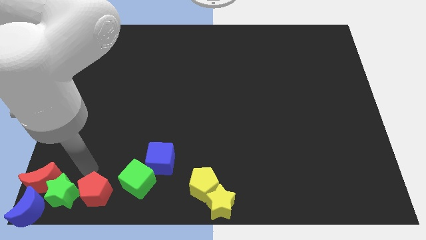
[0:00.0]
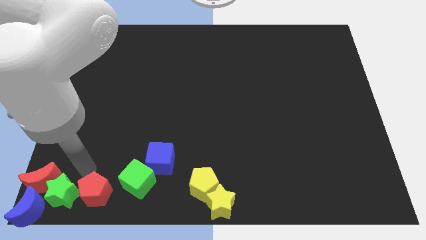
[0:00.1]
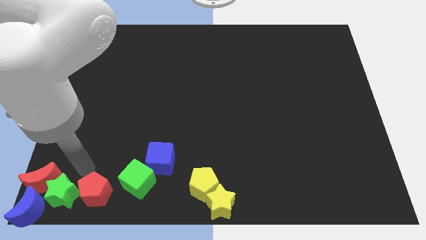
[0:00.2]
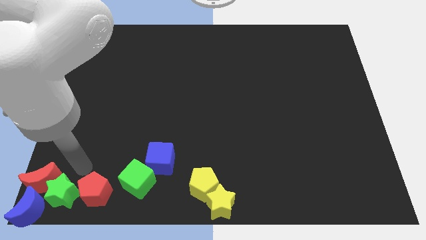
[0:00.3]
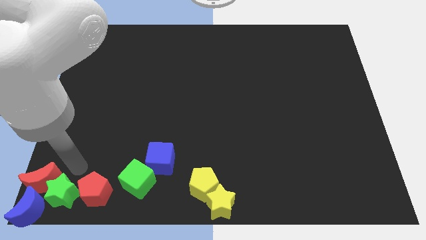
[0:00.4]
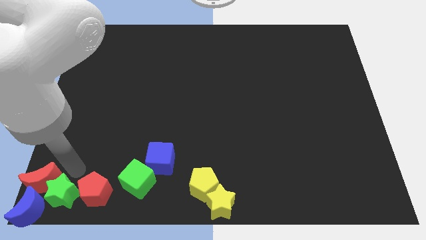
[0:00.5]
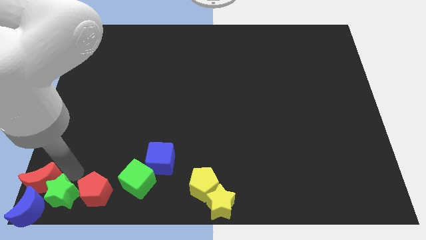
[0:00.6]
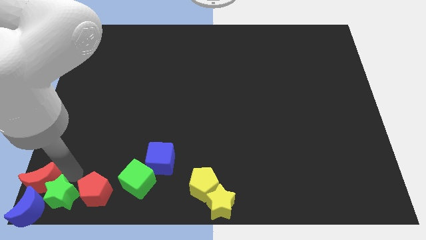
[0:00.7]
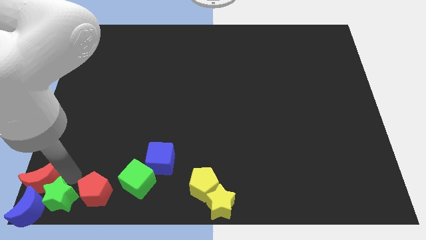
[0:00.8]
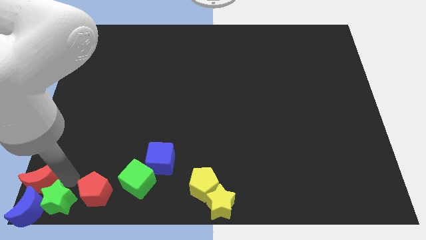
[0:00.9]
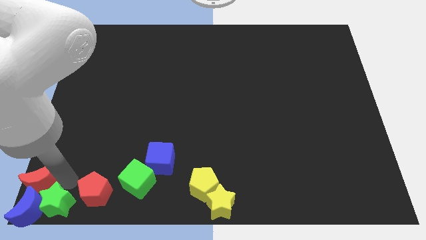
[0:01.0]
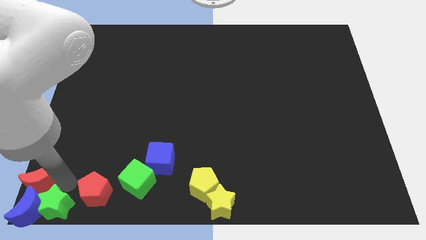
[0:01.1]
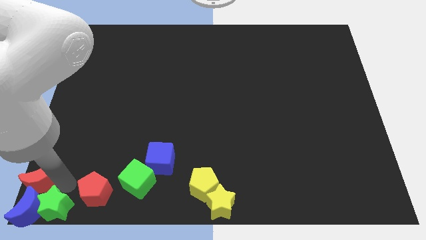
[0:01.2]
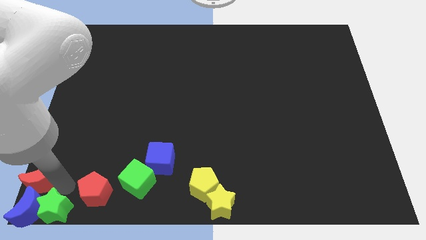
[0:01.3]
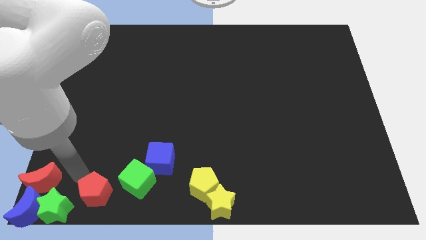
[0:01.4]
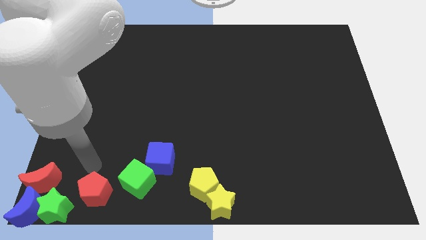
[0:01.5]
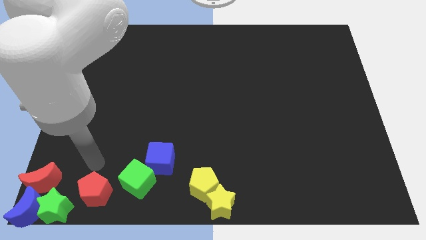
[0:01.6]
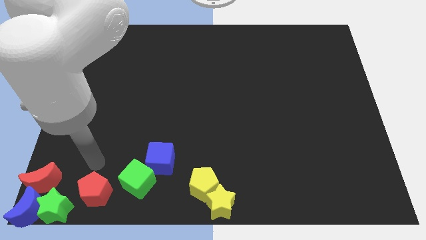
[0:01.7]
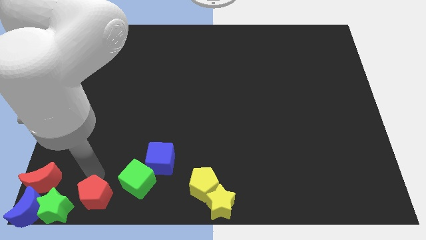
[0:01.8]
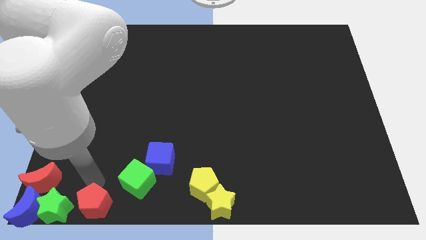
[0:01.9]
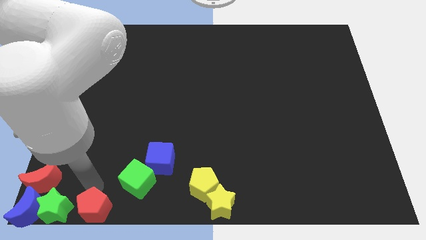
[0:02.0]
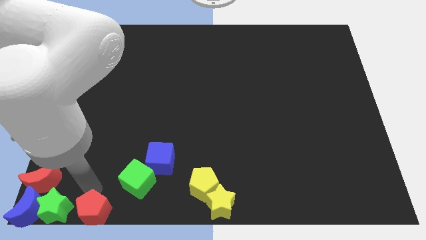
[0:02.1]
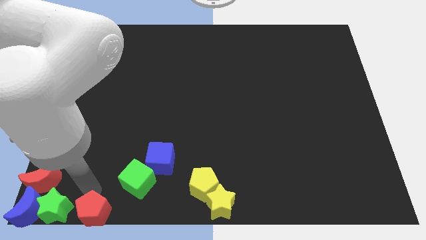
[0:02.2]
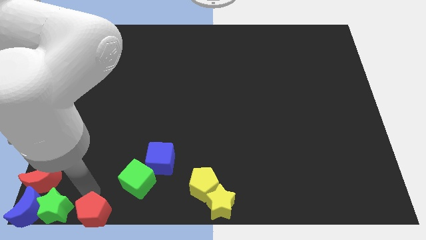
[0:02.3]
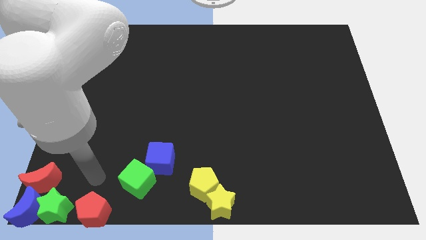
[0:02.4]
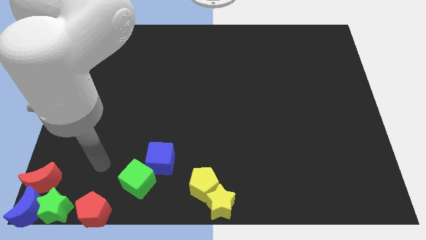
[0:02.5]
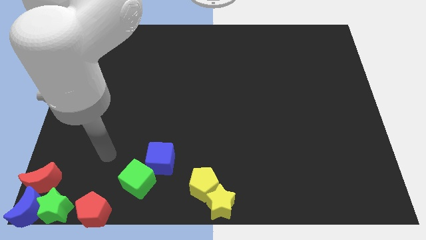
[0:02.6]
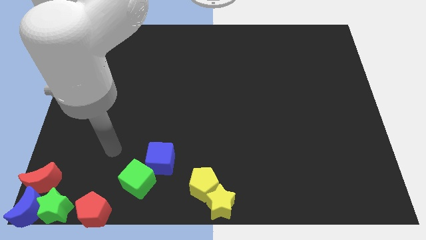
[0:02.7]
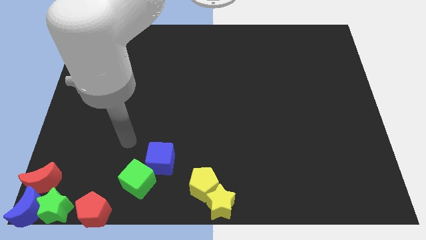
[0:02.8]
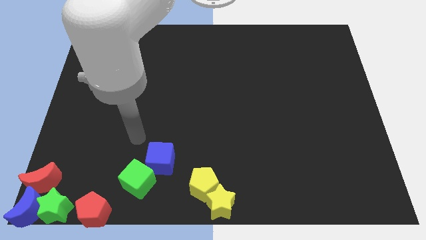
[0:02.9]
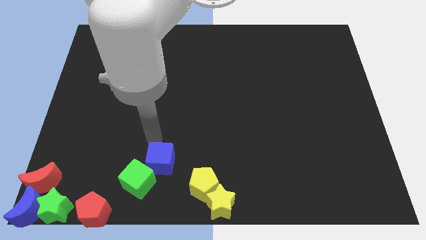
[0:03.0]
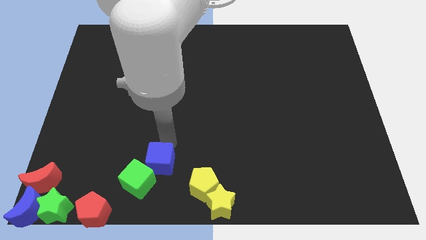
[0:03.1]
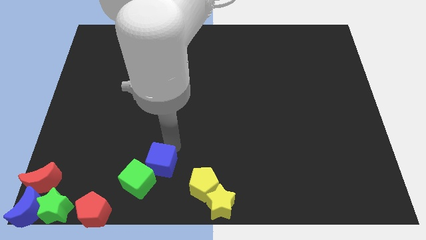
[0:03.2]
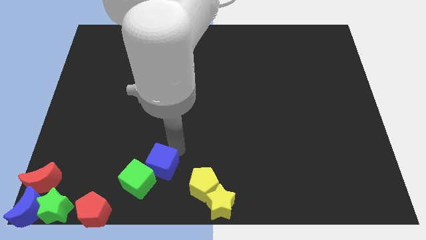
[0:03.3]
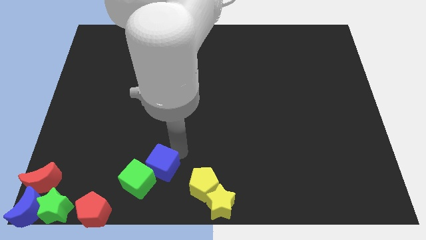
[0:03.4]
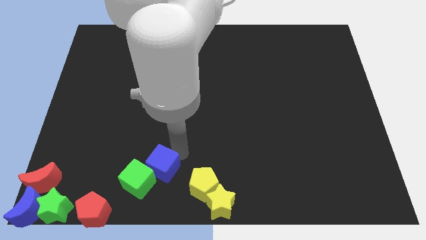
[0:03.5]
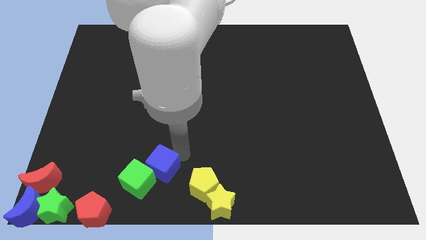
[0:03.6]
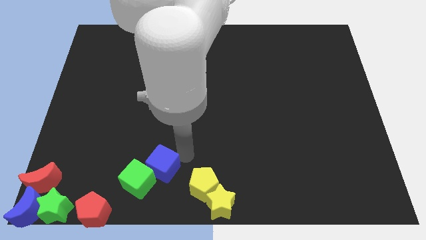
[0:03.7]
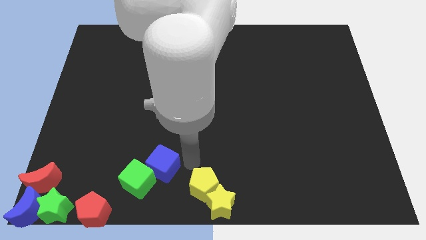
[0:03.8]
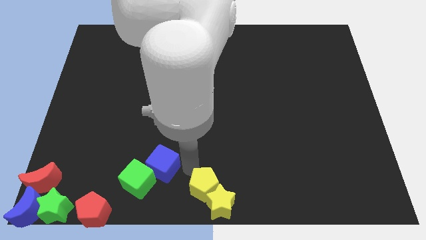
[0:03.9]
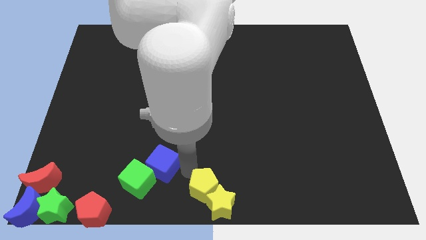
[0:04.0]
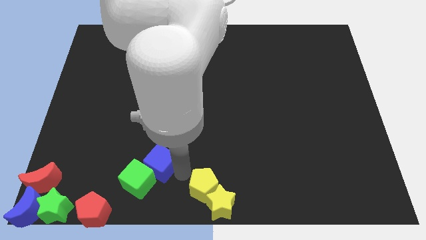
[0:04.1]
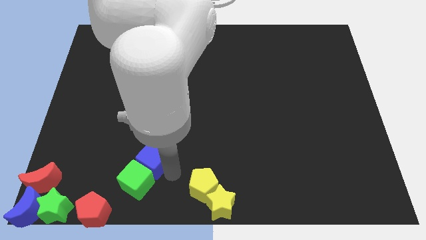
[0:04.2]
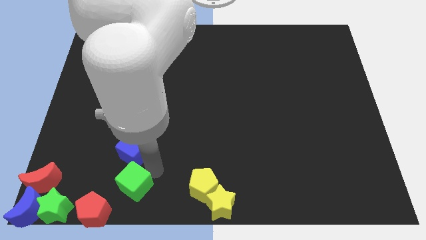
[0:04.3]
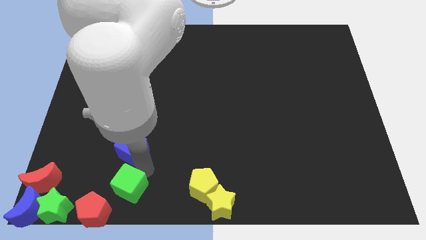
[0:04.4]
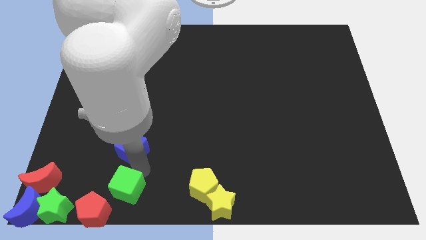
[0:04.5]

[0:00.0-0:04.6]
slightly move the green star and red pentagon to the bottom left of the board

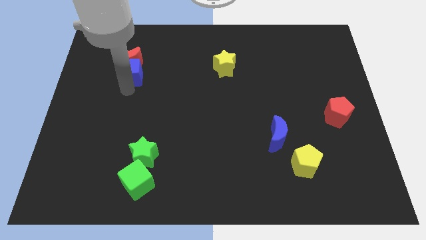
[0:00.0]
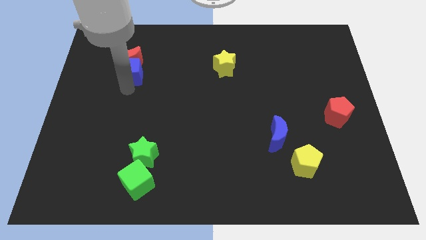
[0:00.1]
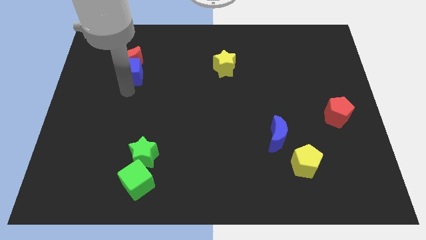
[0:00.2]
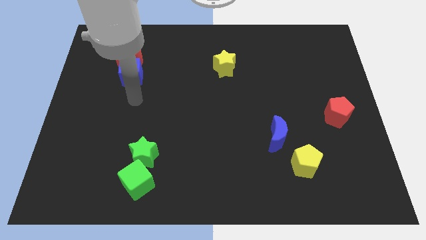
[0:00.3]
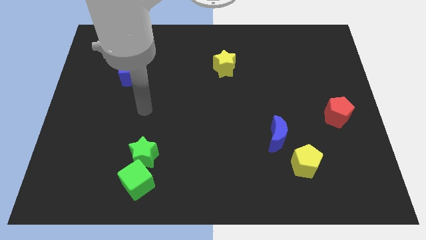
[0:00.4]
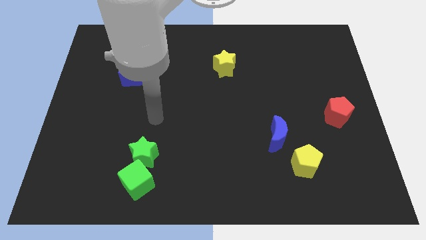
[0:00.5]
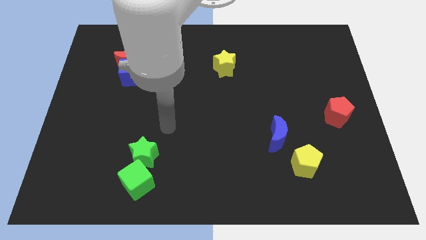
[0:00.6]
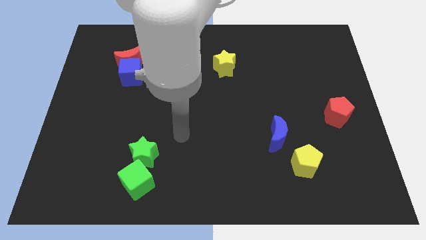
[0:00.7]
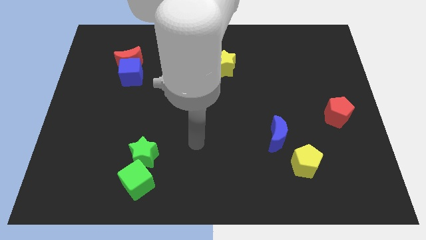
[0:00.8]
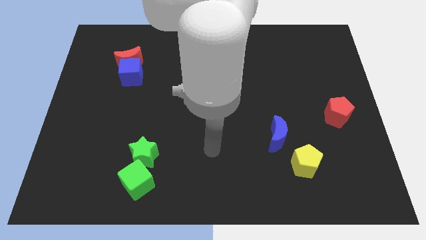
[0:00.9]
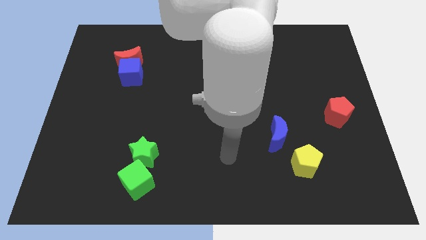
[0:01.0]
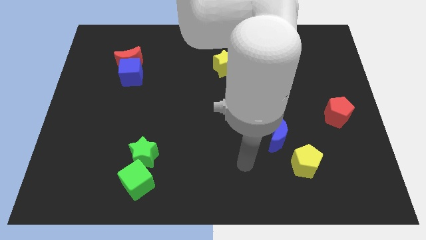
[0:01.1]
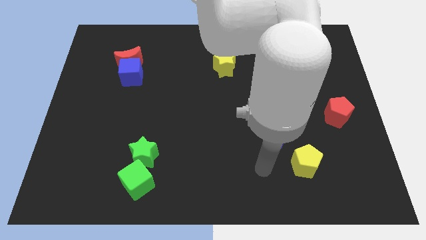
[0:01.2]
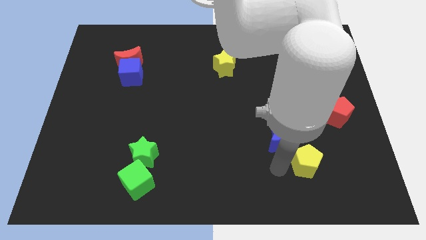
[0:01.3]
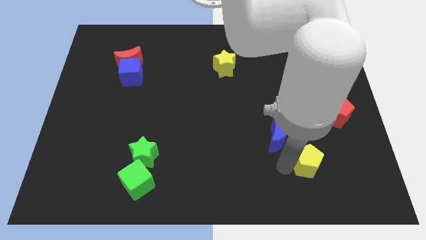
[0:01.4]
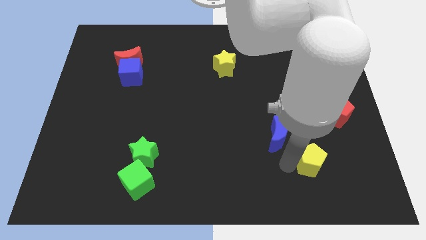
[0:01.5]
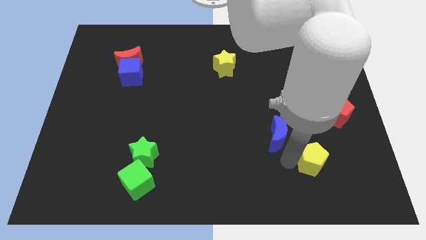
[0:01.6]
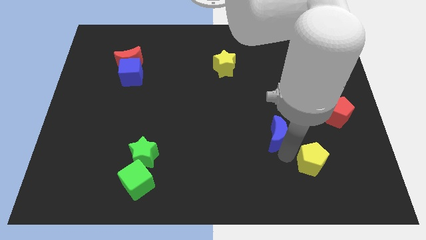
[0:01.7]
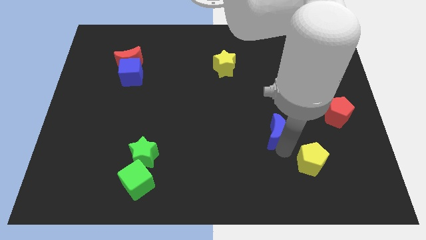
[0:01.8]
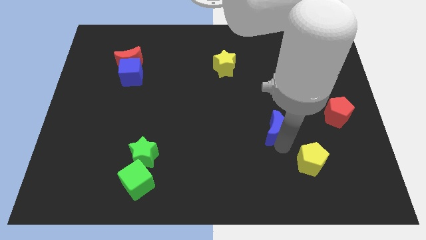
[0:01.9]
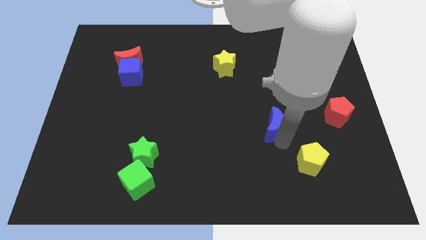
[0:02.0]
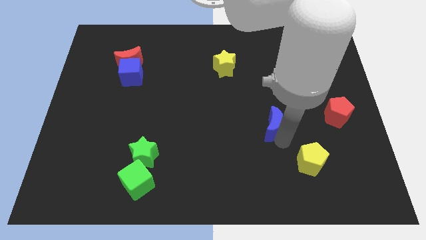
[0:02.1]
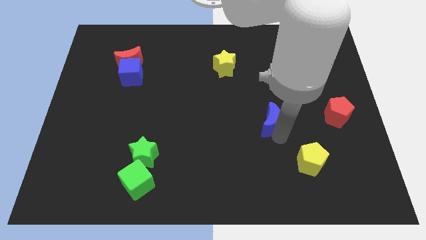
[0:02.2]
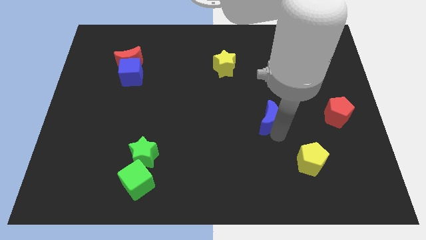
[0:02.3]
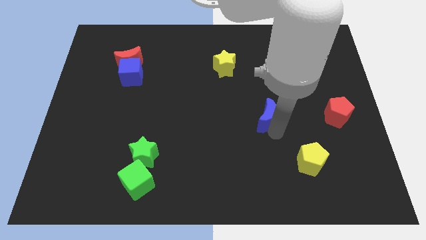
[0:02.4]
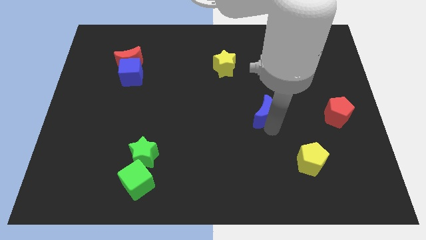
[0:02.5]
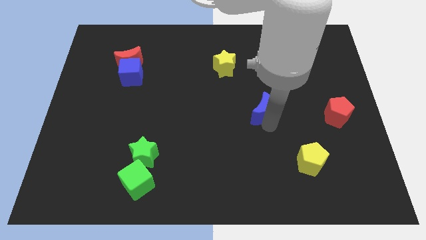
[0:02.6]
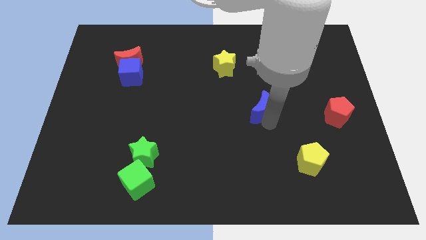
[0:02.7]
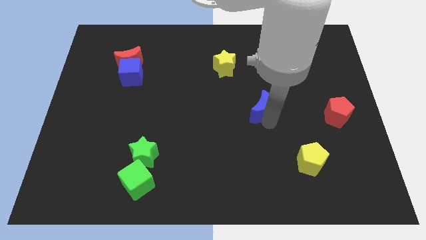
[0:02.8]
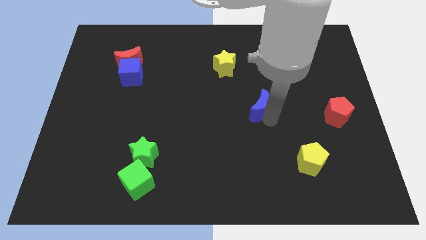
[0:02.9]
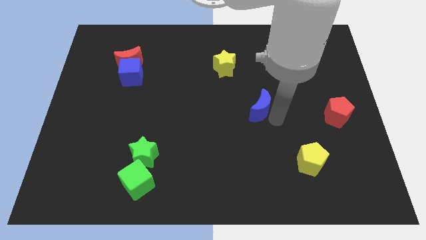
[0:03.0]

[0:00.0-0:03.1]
separate the blue moon from the yellow pentagon

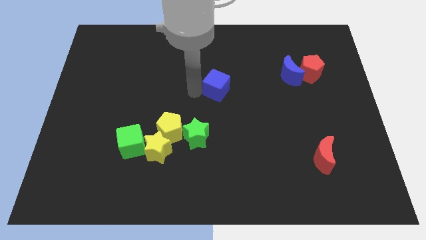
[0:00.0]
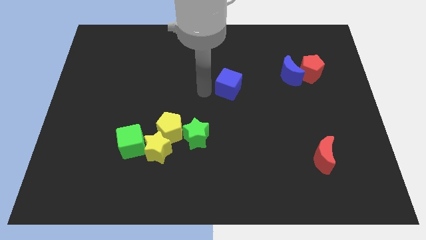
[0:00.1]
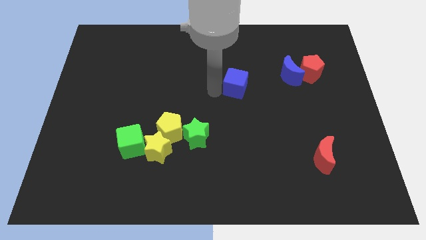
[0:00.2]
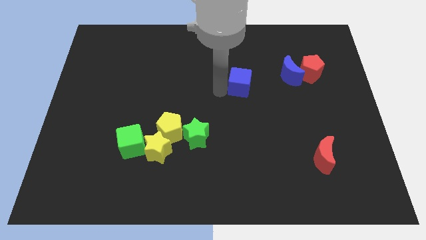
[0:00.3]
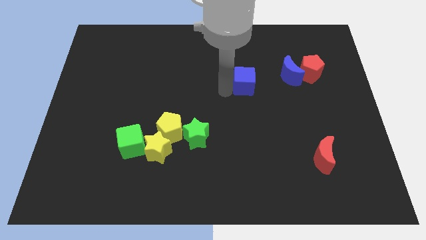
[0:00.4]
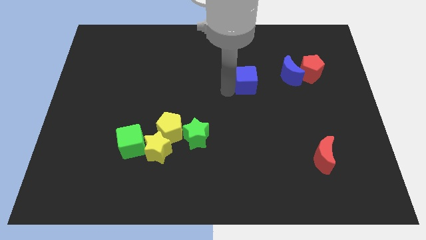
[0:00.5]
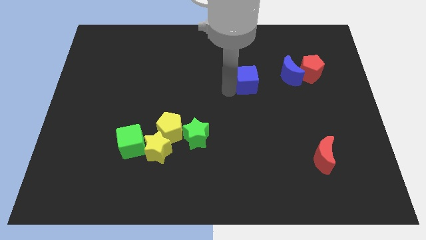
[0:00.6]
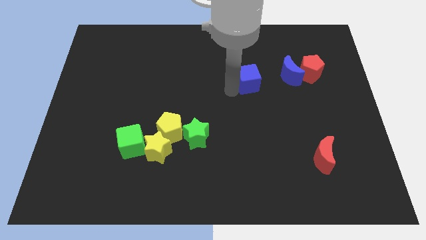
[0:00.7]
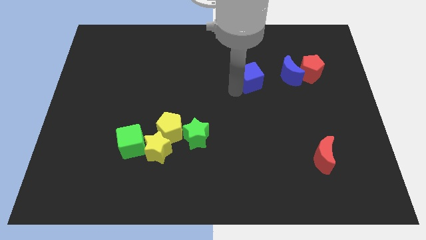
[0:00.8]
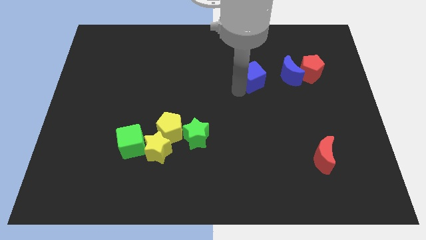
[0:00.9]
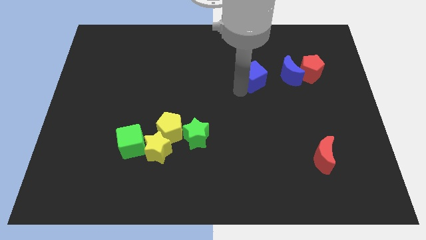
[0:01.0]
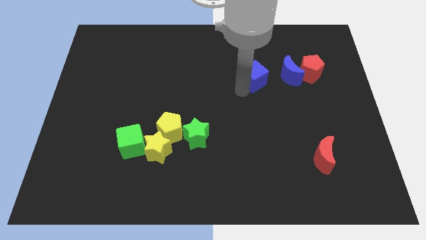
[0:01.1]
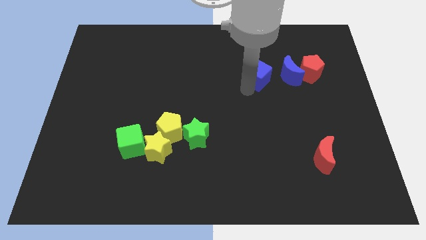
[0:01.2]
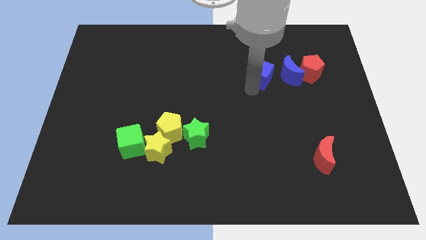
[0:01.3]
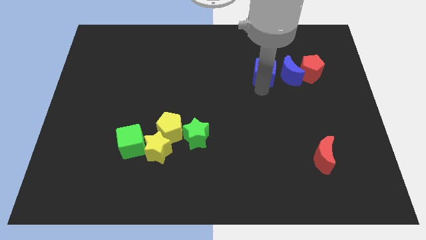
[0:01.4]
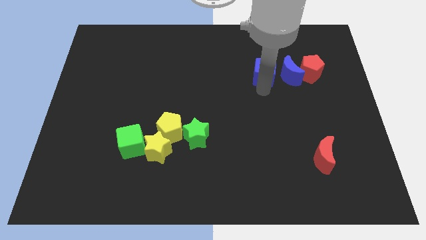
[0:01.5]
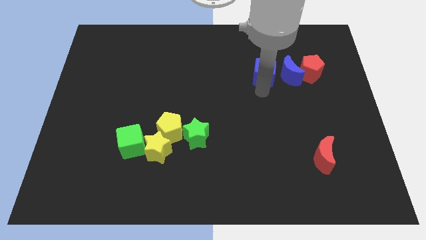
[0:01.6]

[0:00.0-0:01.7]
push the blue cube left to the blue crescent
